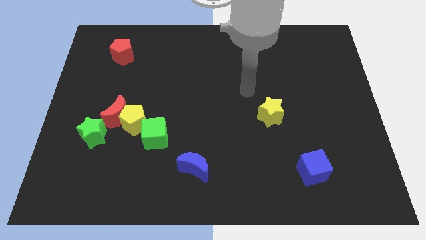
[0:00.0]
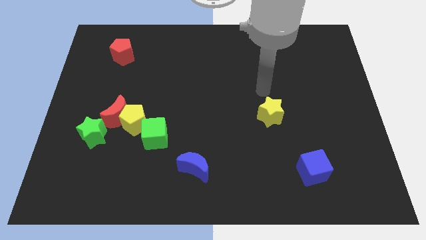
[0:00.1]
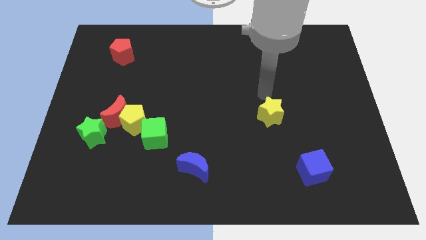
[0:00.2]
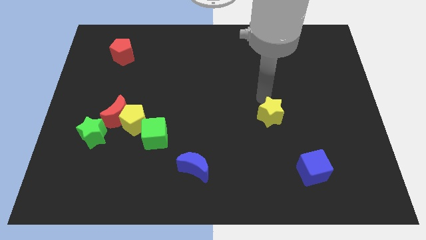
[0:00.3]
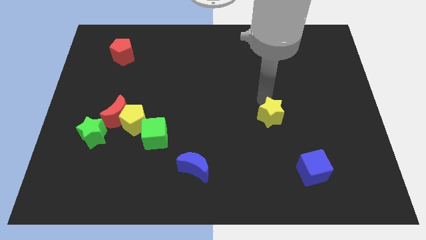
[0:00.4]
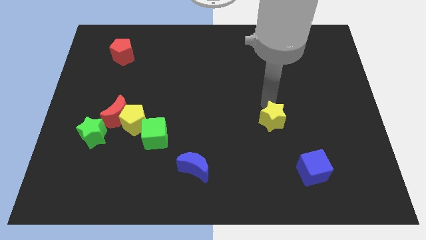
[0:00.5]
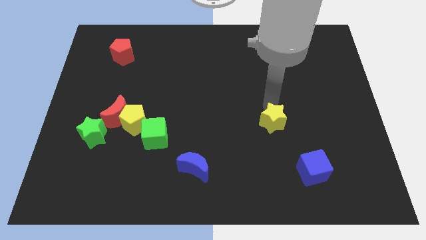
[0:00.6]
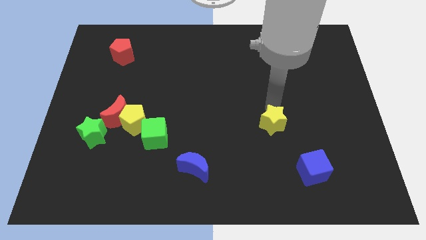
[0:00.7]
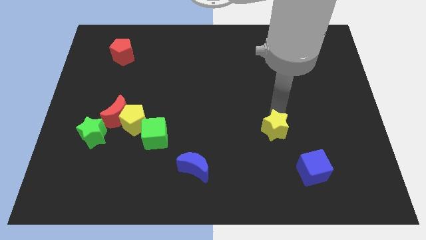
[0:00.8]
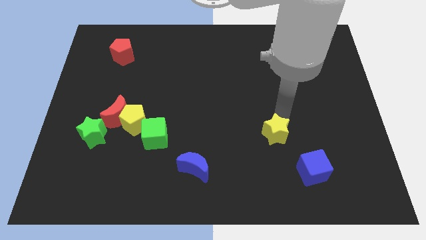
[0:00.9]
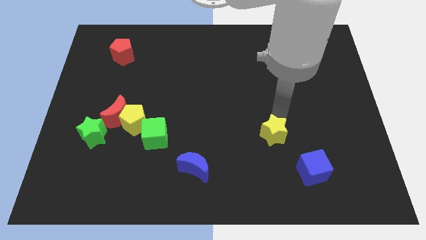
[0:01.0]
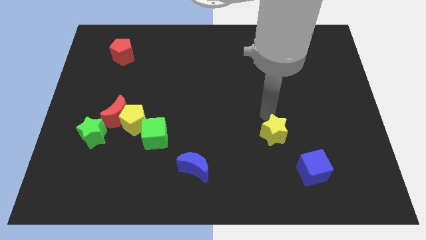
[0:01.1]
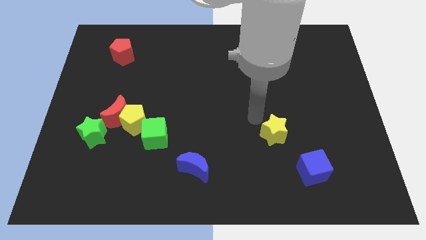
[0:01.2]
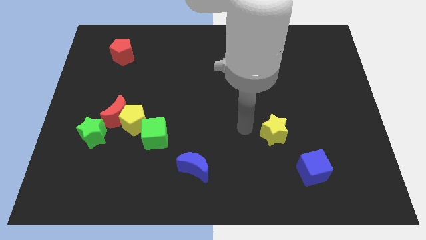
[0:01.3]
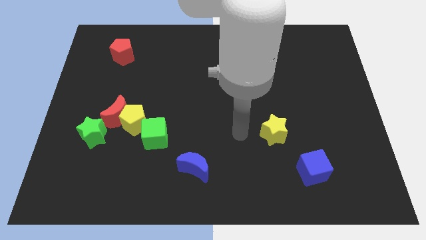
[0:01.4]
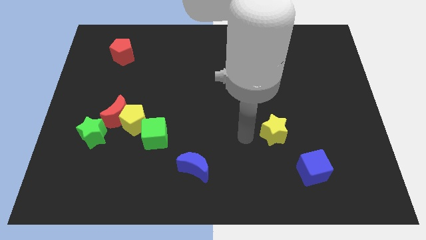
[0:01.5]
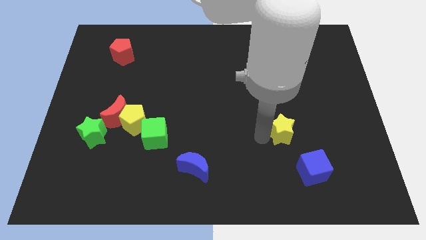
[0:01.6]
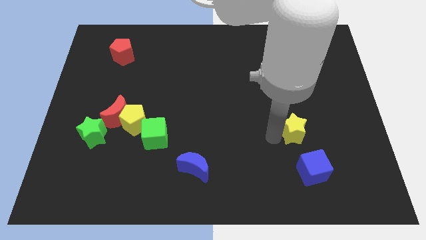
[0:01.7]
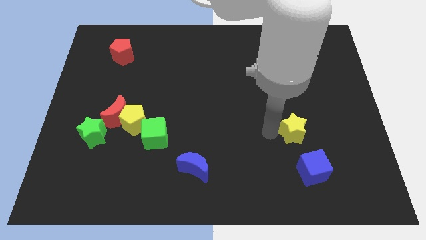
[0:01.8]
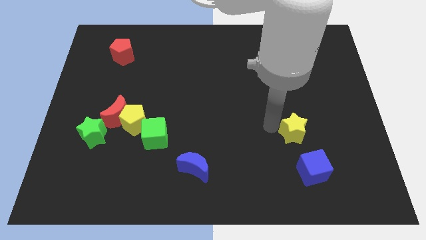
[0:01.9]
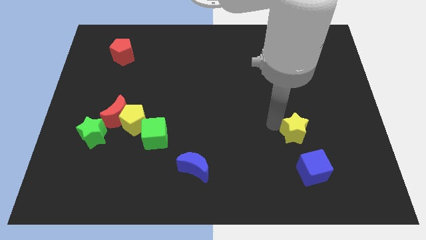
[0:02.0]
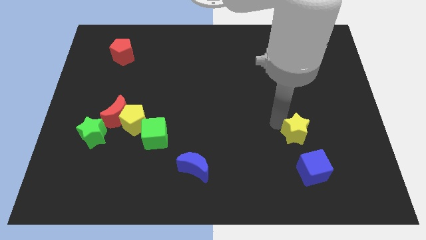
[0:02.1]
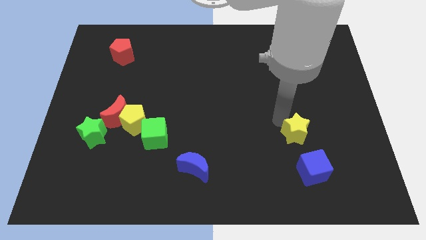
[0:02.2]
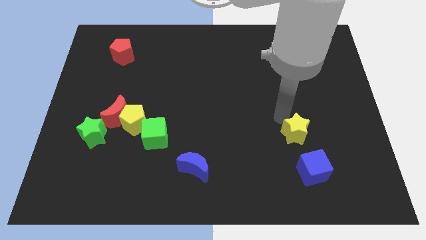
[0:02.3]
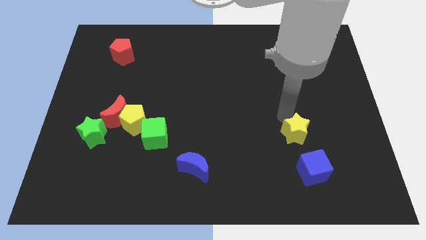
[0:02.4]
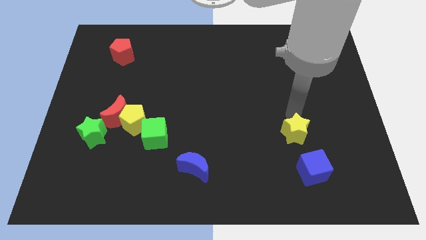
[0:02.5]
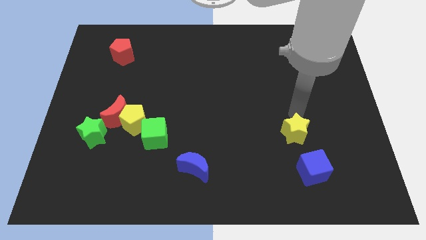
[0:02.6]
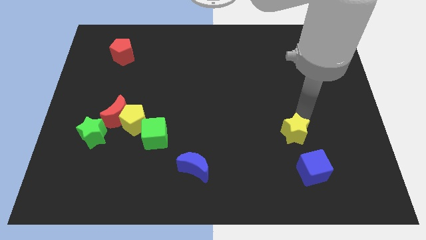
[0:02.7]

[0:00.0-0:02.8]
move the yellow star above the blue cube

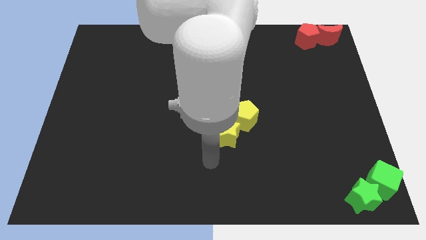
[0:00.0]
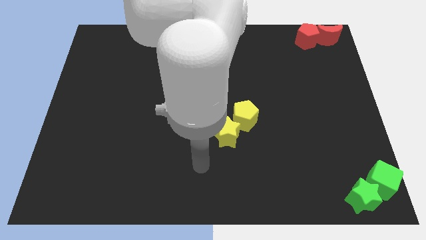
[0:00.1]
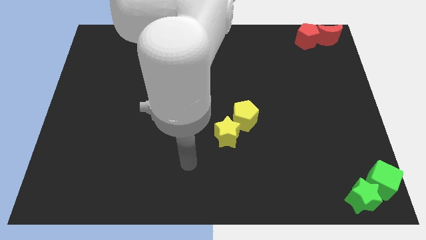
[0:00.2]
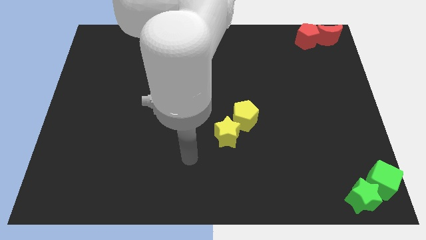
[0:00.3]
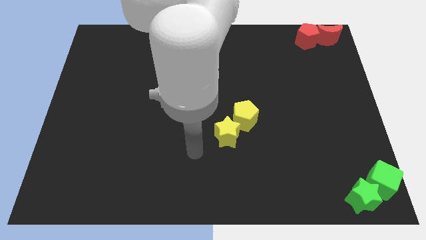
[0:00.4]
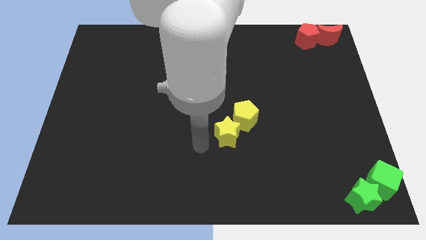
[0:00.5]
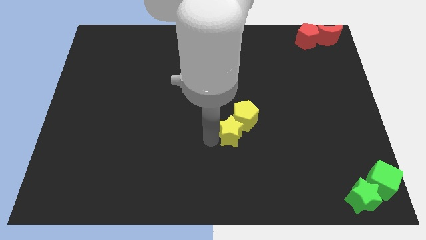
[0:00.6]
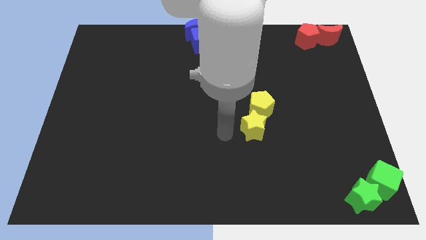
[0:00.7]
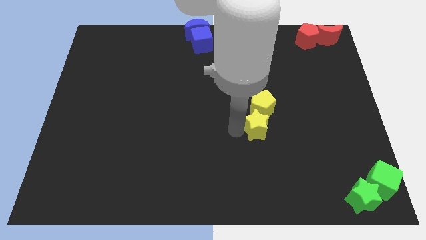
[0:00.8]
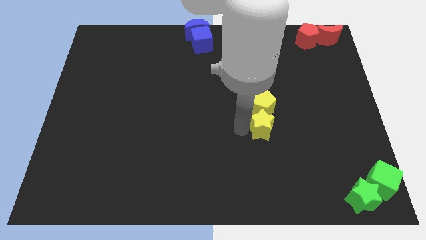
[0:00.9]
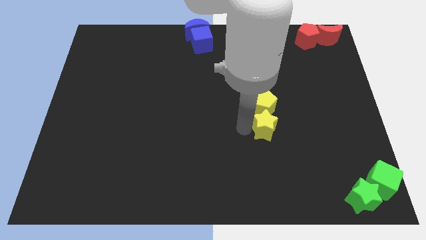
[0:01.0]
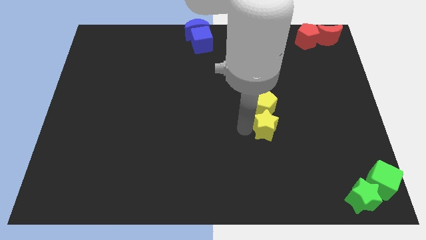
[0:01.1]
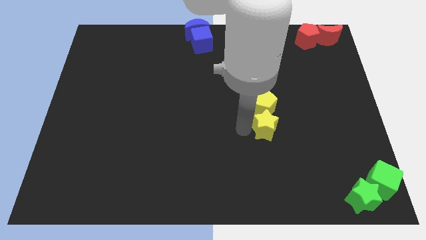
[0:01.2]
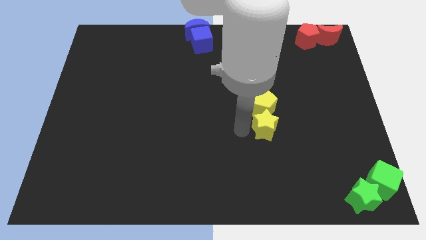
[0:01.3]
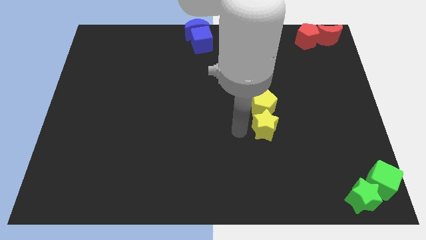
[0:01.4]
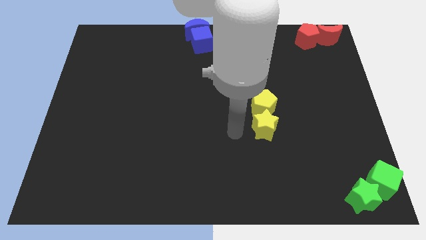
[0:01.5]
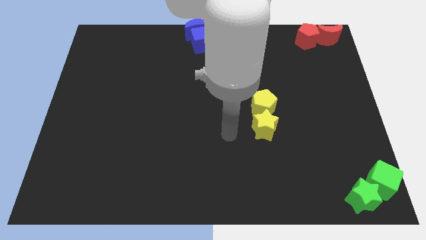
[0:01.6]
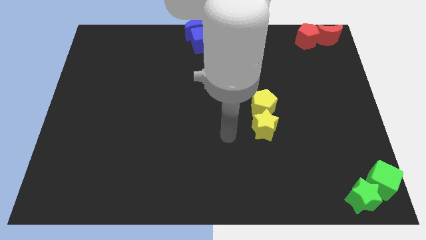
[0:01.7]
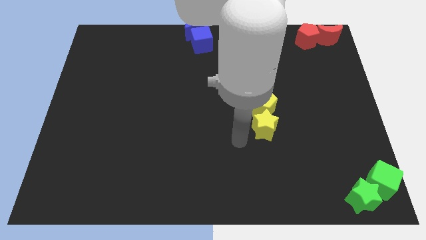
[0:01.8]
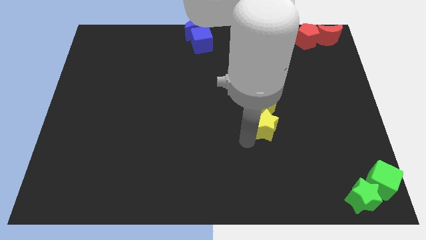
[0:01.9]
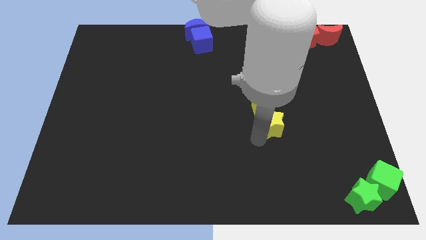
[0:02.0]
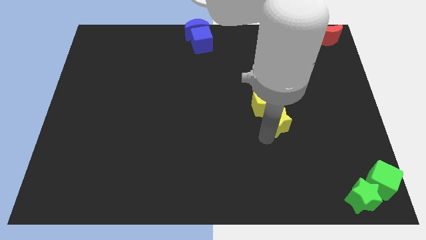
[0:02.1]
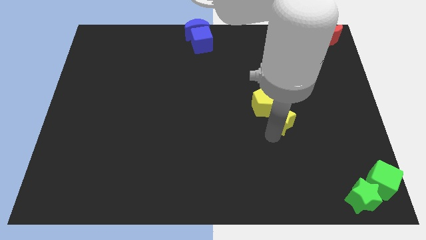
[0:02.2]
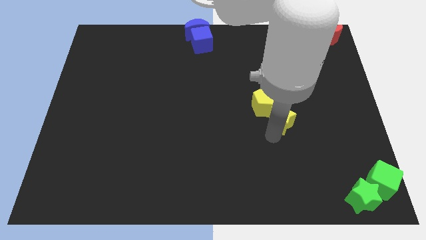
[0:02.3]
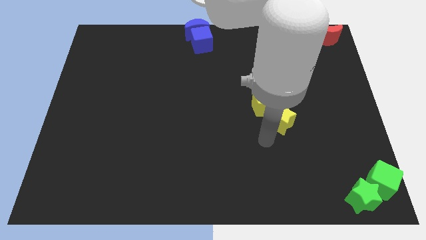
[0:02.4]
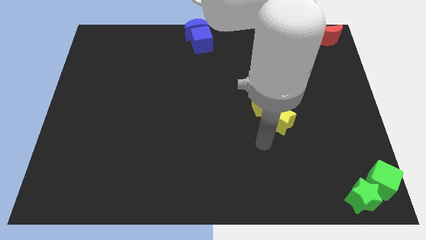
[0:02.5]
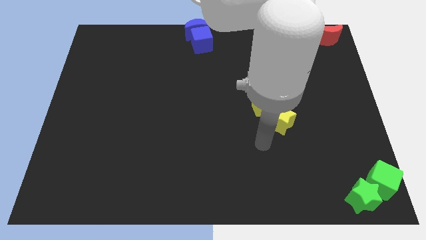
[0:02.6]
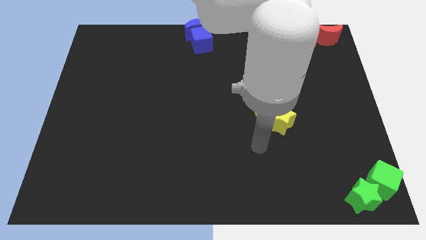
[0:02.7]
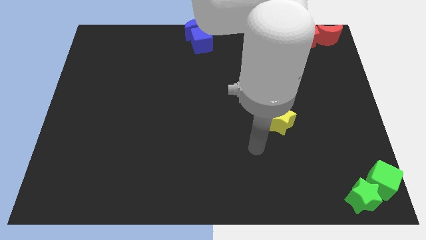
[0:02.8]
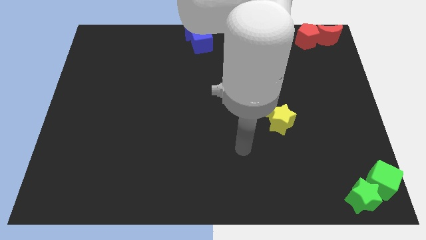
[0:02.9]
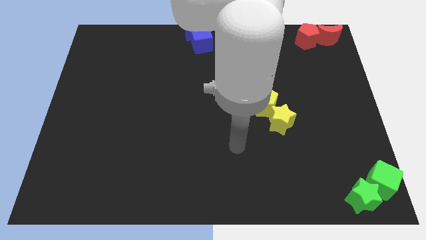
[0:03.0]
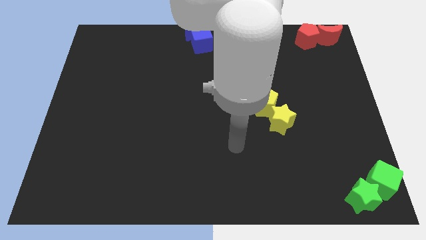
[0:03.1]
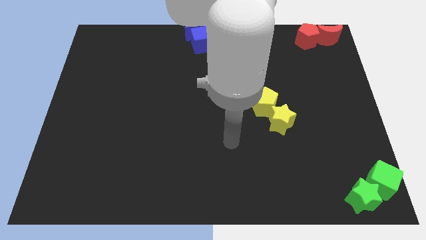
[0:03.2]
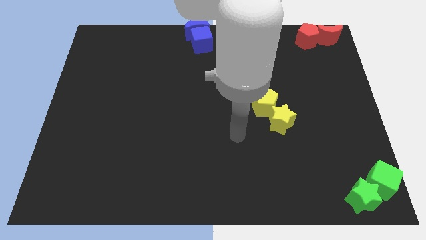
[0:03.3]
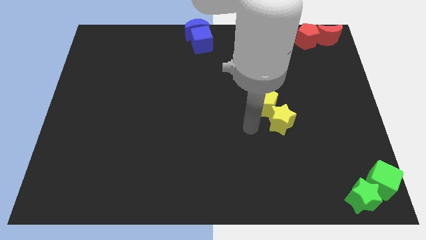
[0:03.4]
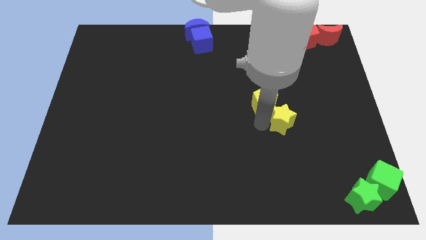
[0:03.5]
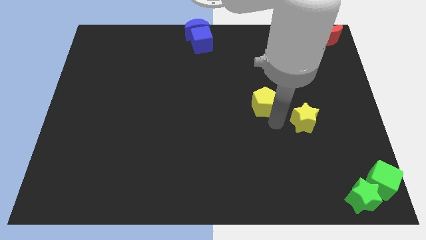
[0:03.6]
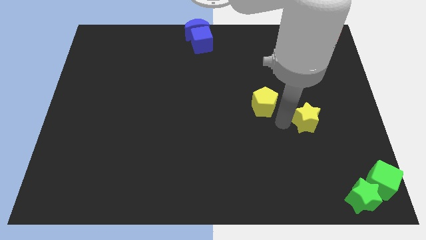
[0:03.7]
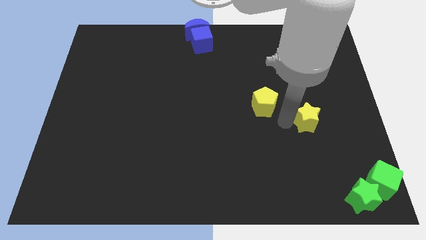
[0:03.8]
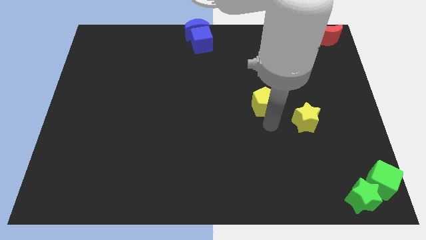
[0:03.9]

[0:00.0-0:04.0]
move yellow blocks slightly right

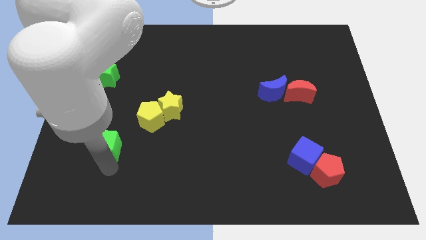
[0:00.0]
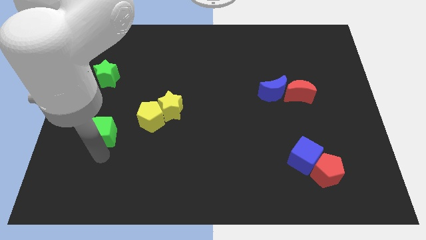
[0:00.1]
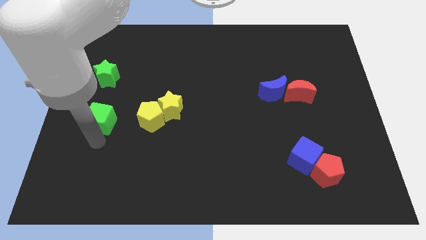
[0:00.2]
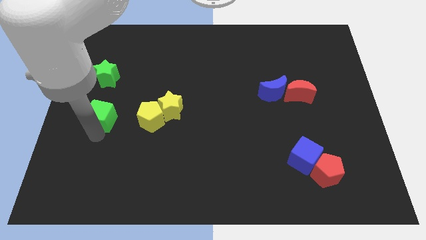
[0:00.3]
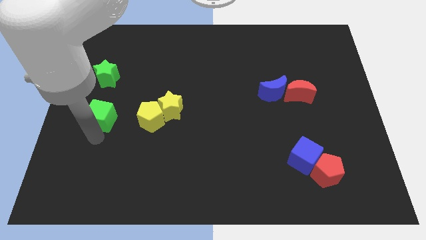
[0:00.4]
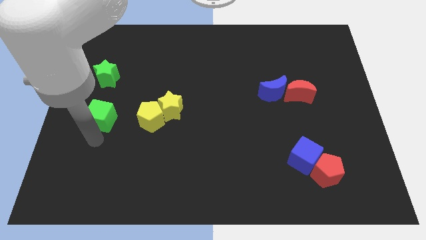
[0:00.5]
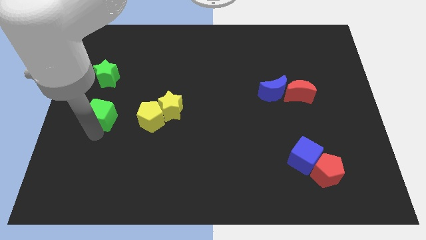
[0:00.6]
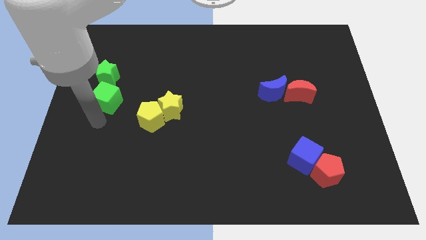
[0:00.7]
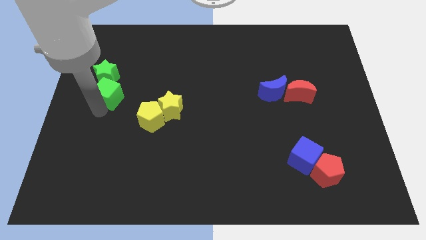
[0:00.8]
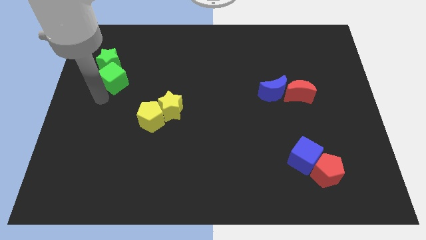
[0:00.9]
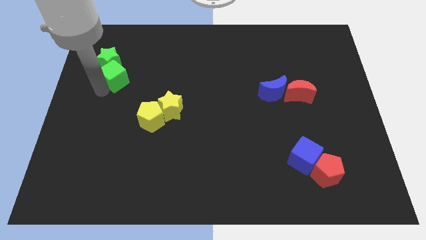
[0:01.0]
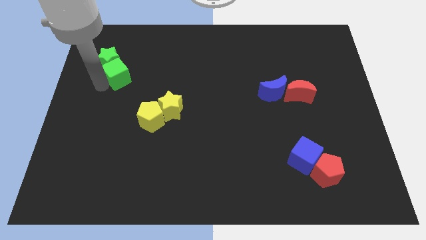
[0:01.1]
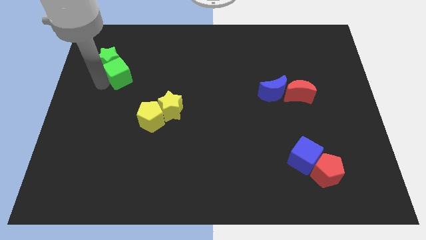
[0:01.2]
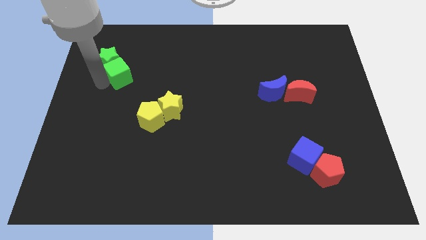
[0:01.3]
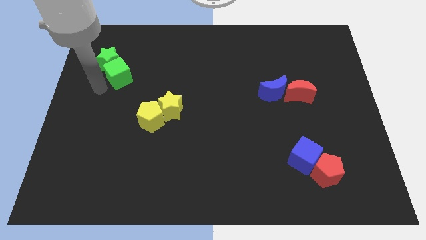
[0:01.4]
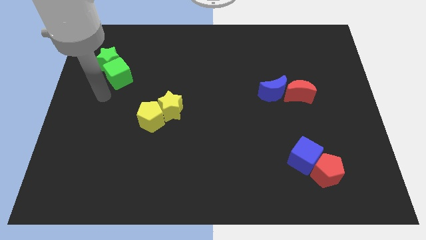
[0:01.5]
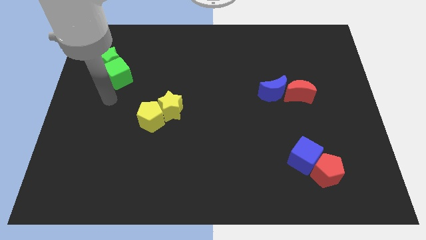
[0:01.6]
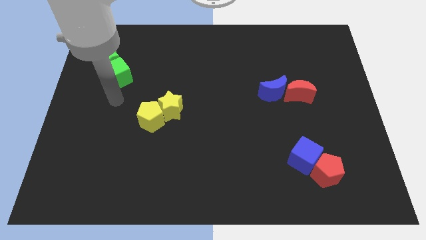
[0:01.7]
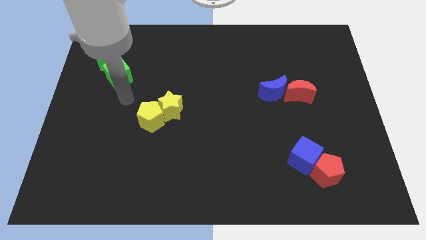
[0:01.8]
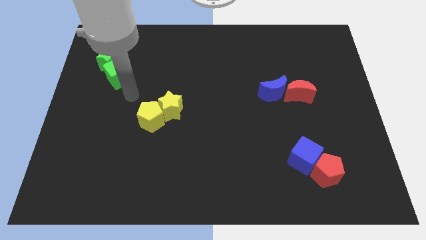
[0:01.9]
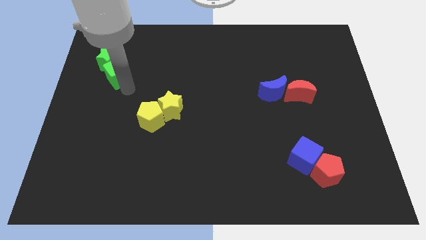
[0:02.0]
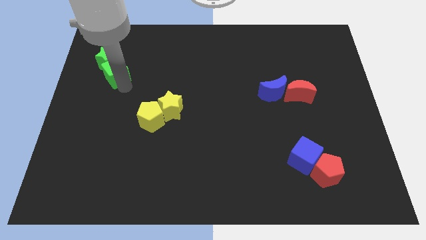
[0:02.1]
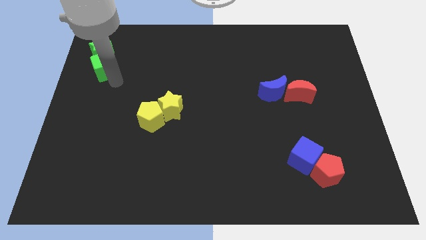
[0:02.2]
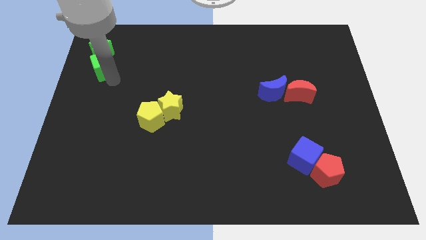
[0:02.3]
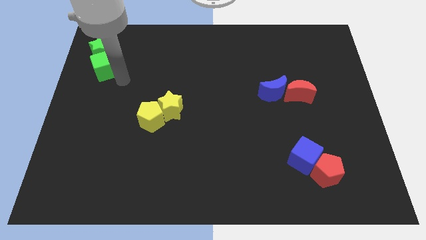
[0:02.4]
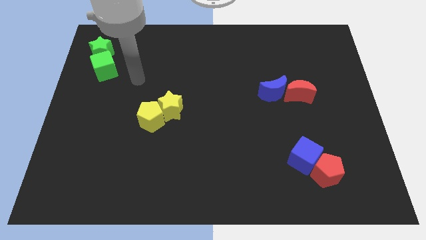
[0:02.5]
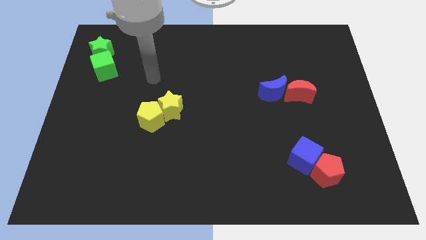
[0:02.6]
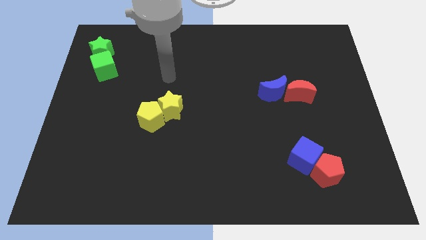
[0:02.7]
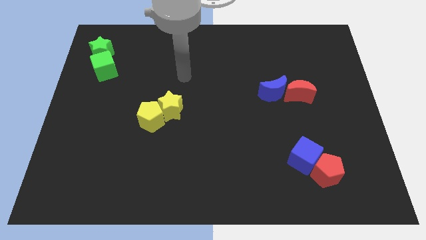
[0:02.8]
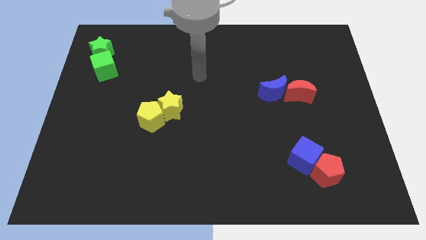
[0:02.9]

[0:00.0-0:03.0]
move green blocks to the top left of the board
